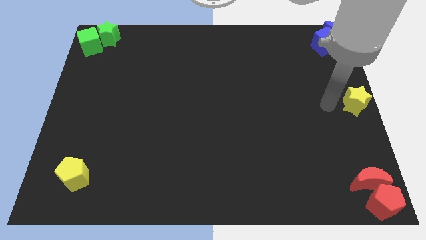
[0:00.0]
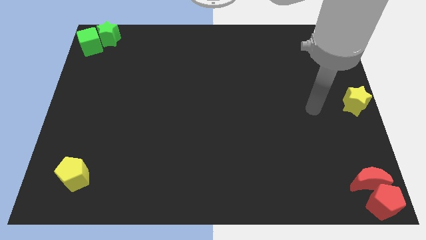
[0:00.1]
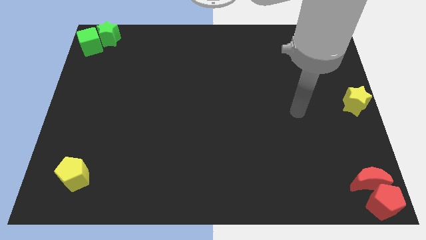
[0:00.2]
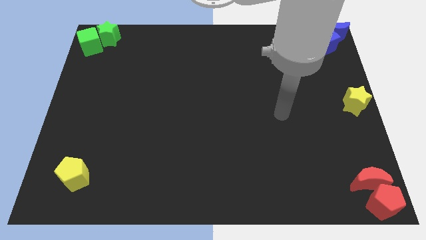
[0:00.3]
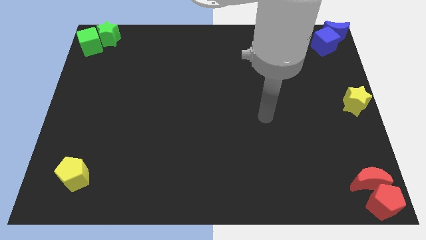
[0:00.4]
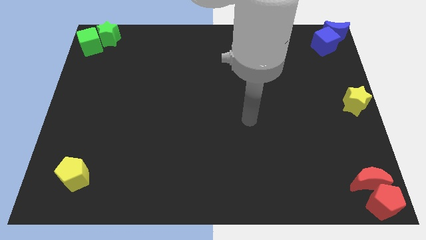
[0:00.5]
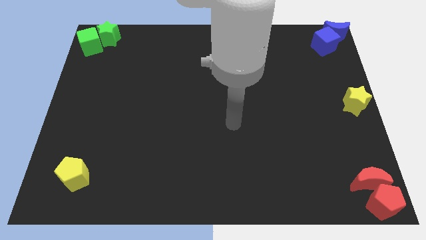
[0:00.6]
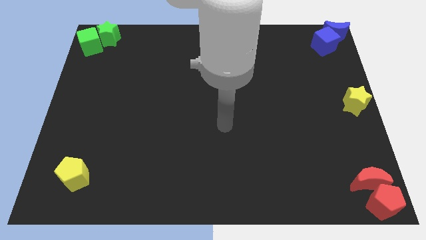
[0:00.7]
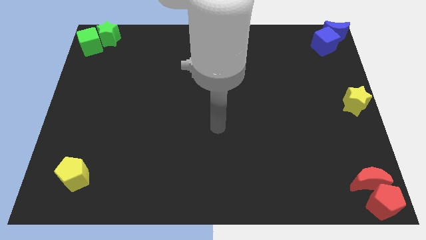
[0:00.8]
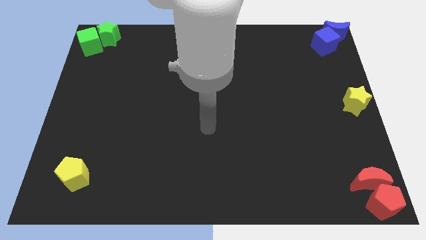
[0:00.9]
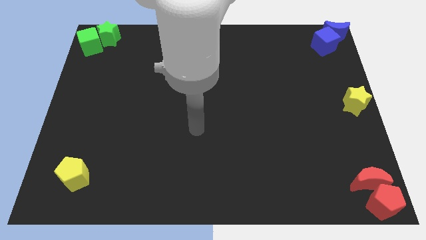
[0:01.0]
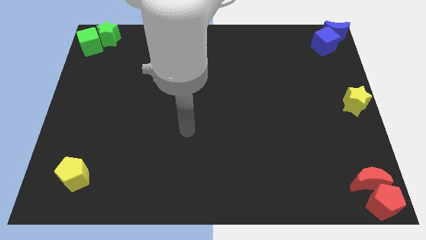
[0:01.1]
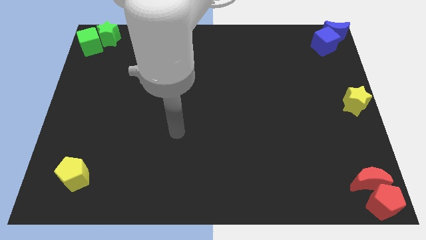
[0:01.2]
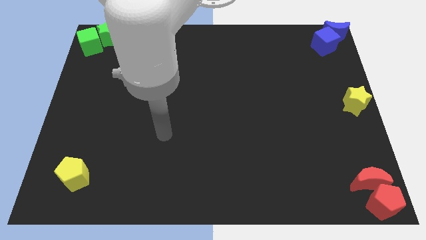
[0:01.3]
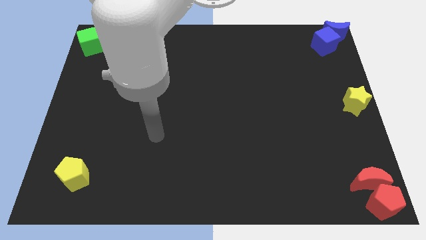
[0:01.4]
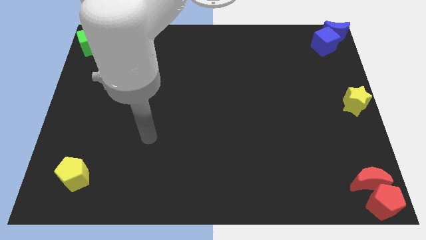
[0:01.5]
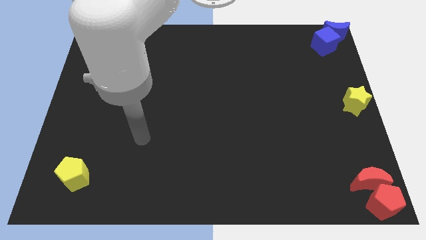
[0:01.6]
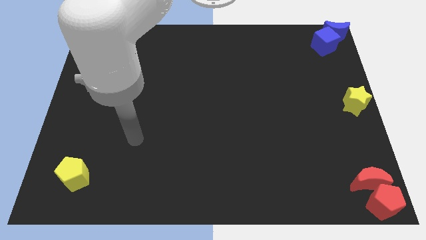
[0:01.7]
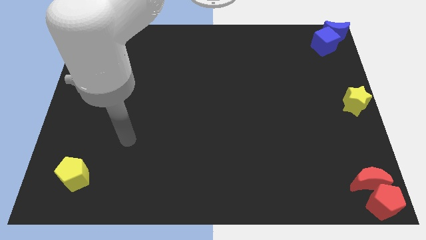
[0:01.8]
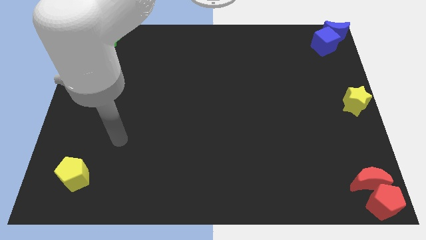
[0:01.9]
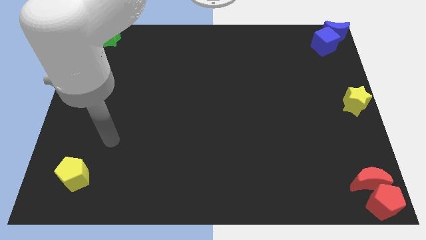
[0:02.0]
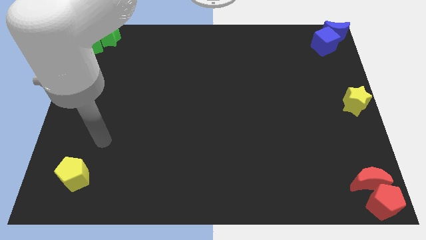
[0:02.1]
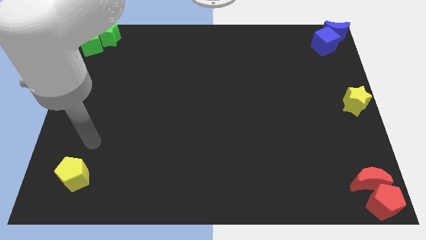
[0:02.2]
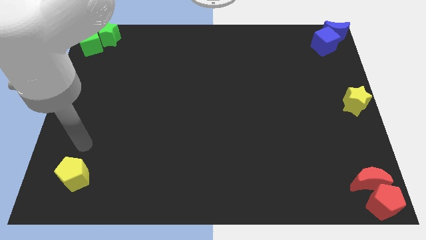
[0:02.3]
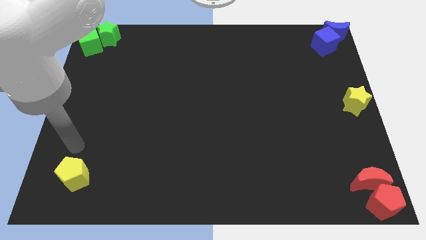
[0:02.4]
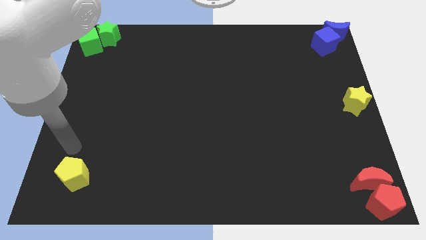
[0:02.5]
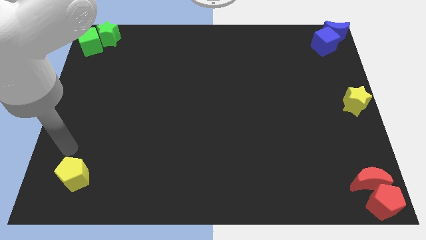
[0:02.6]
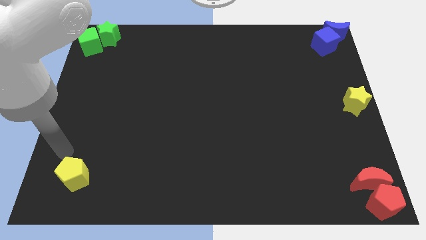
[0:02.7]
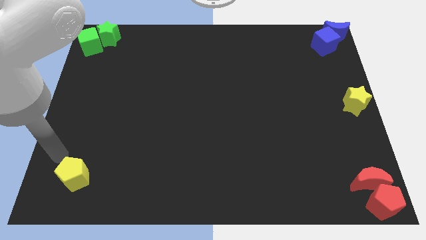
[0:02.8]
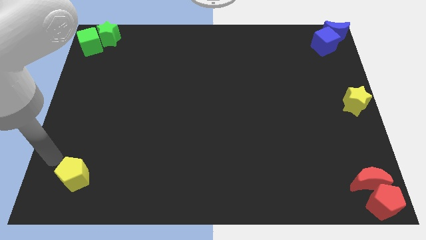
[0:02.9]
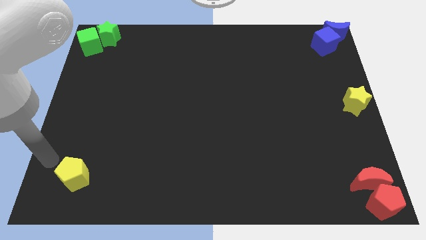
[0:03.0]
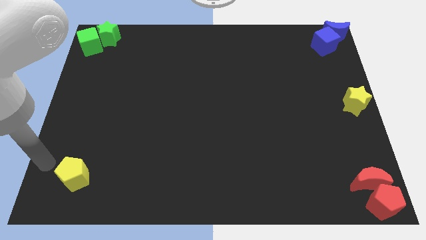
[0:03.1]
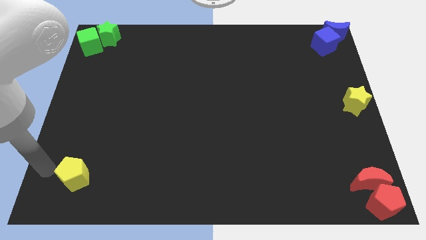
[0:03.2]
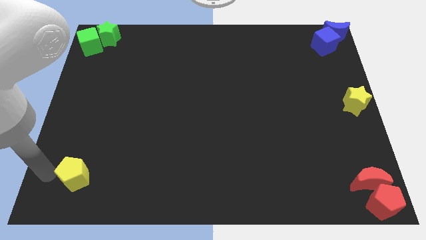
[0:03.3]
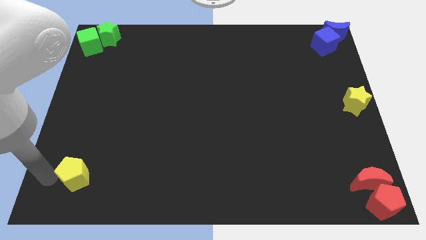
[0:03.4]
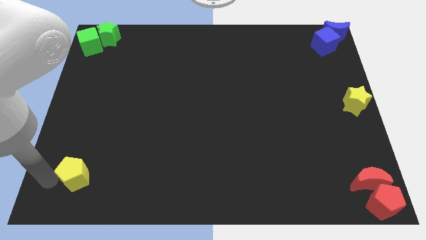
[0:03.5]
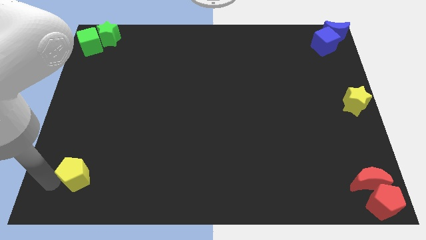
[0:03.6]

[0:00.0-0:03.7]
move your arm towards the yellow pentagon

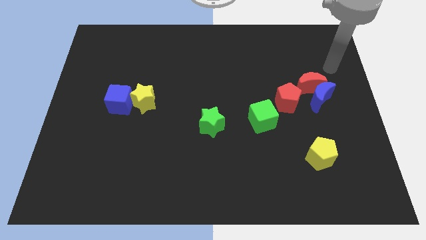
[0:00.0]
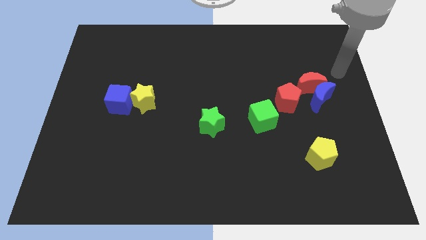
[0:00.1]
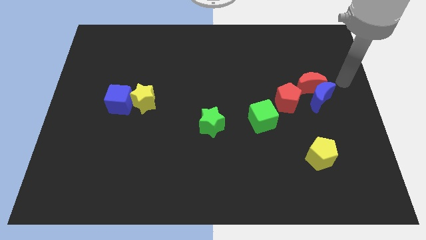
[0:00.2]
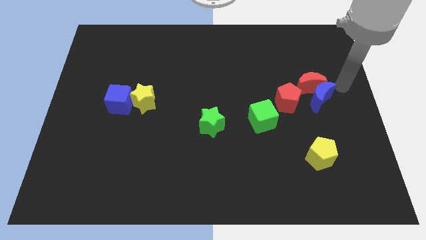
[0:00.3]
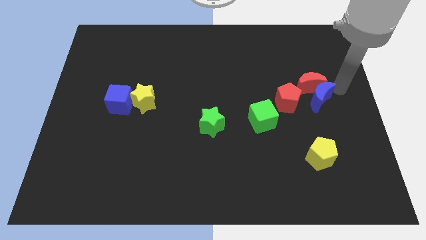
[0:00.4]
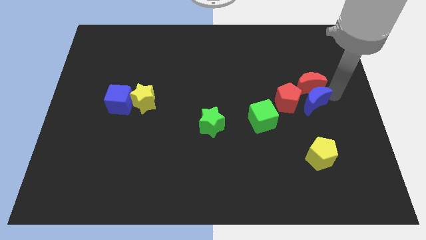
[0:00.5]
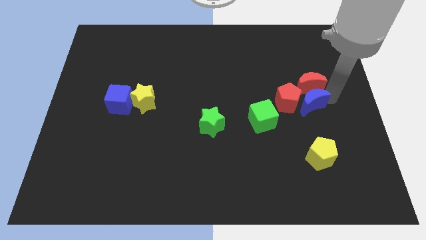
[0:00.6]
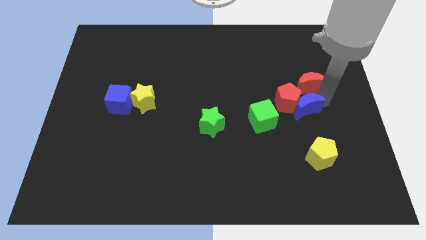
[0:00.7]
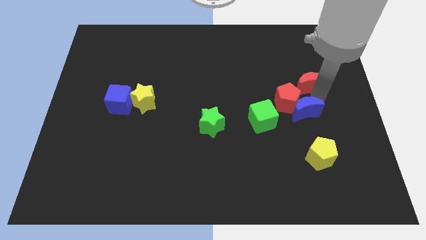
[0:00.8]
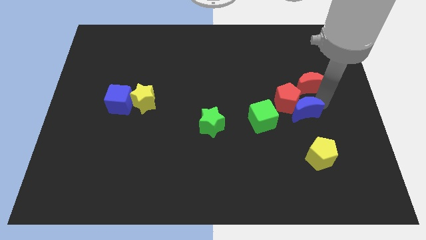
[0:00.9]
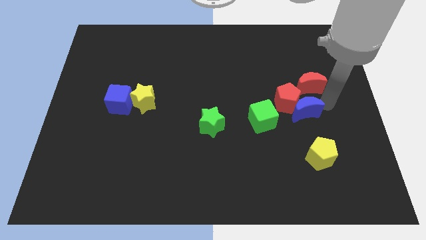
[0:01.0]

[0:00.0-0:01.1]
separate blue moon from red moon

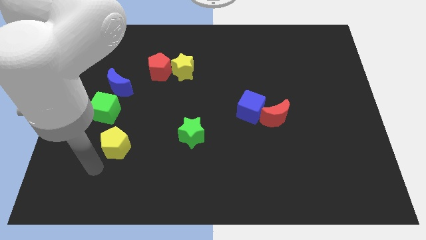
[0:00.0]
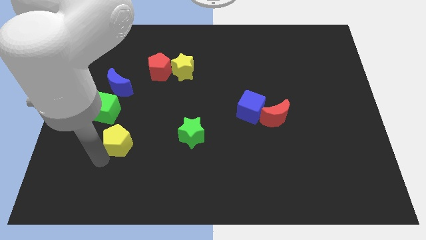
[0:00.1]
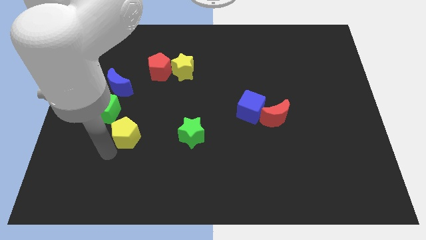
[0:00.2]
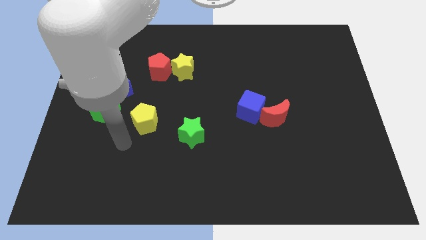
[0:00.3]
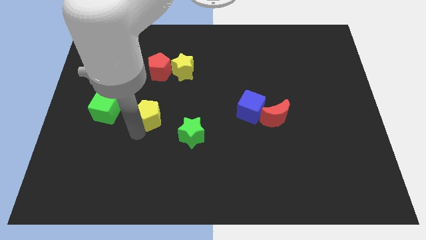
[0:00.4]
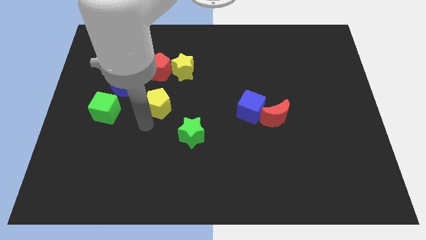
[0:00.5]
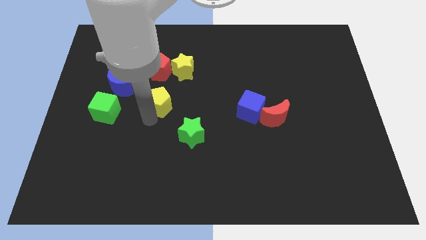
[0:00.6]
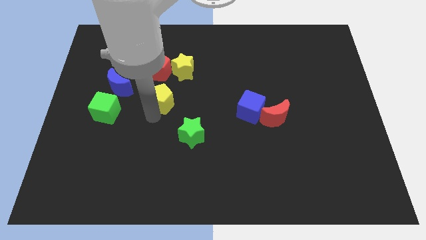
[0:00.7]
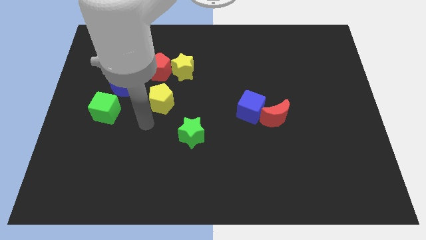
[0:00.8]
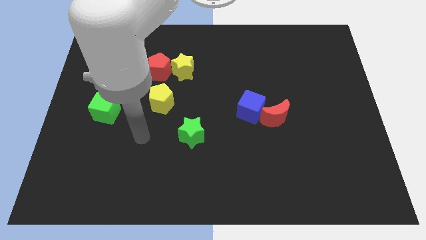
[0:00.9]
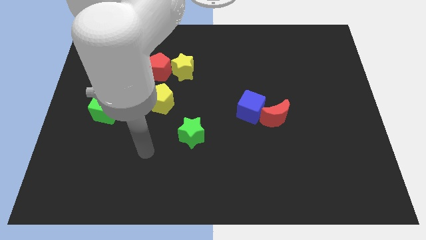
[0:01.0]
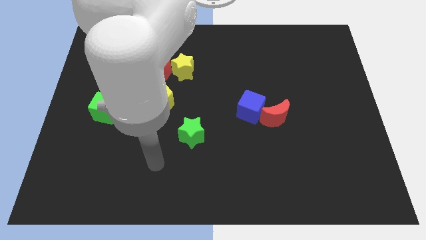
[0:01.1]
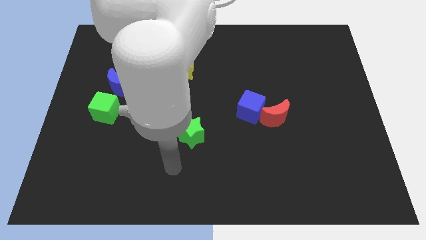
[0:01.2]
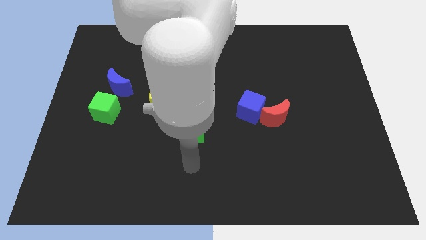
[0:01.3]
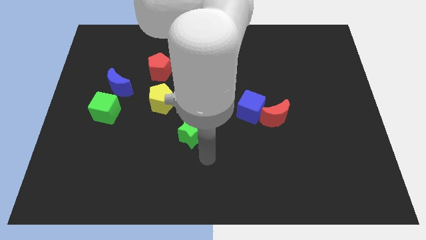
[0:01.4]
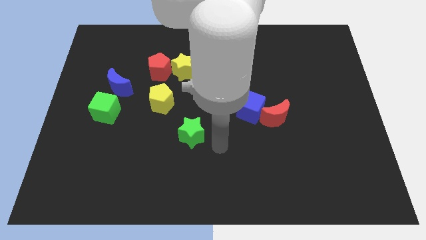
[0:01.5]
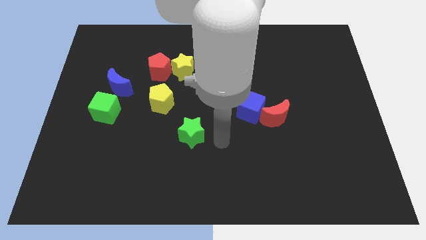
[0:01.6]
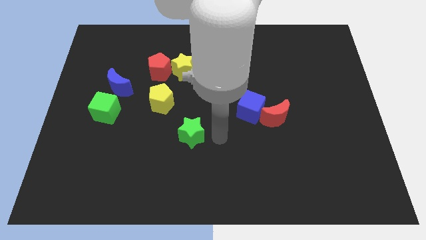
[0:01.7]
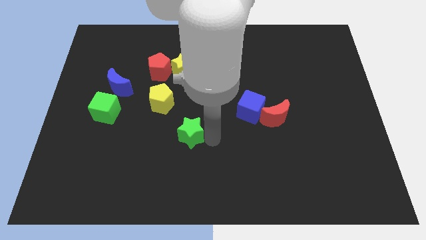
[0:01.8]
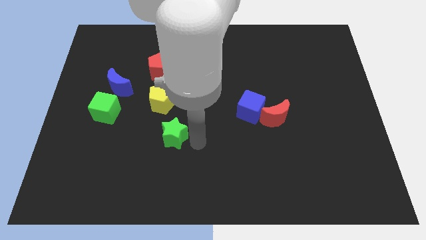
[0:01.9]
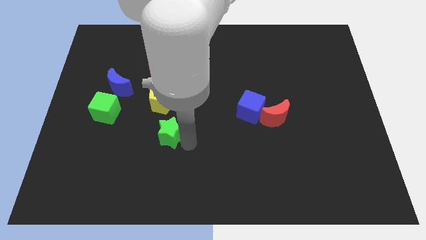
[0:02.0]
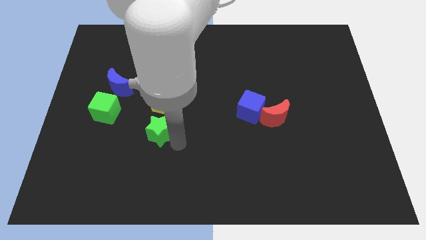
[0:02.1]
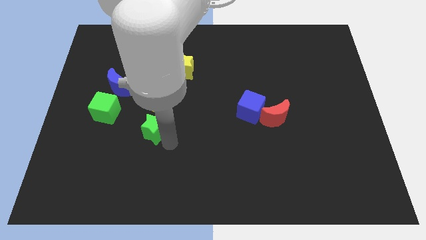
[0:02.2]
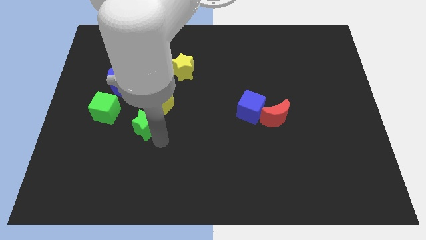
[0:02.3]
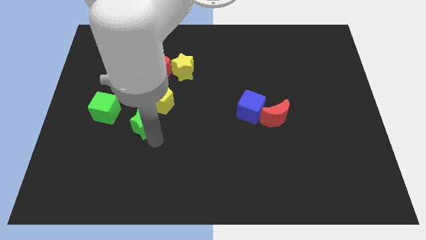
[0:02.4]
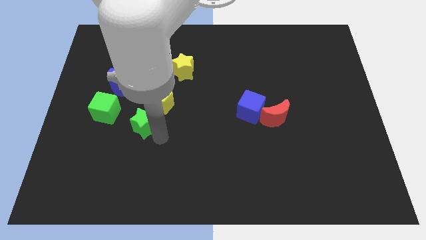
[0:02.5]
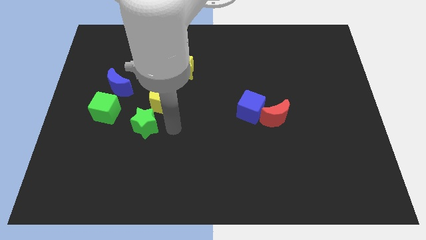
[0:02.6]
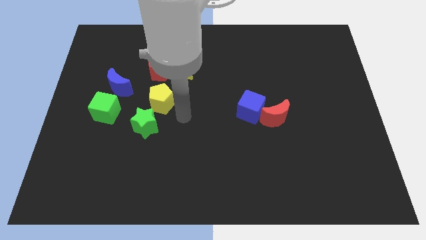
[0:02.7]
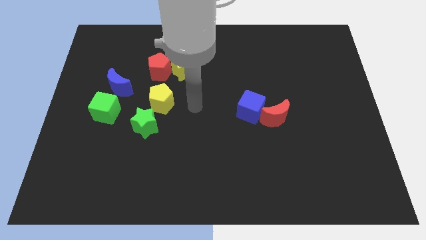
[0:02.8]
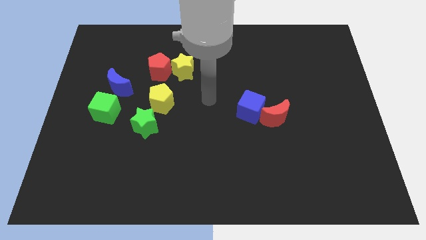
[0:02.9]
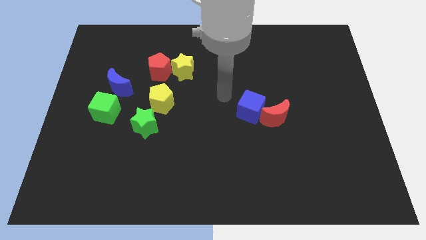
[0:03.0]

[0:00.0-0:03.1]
put the green star diagonally bottom left to the yellow pentagon

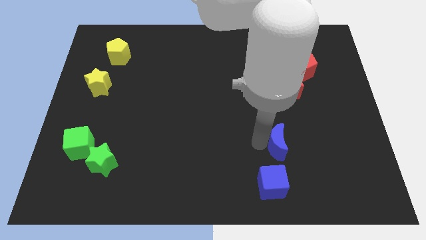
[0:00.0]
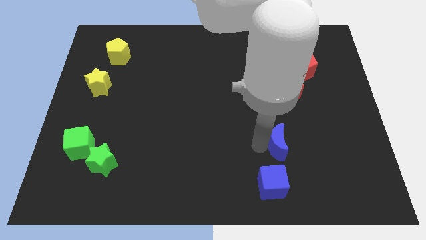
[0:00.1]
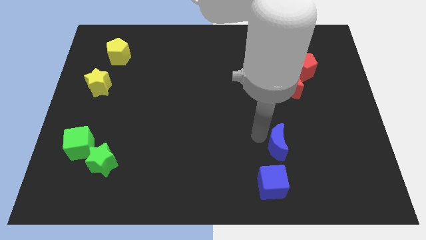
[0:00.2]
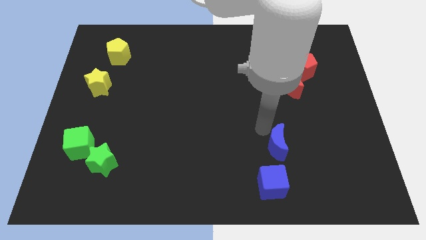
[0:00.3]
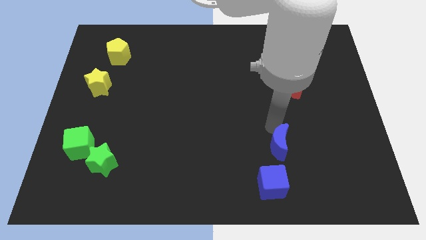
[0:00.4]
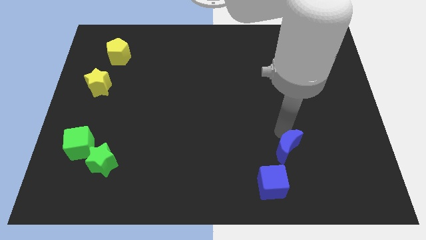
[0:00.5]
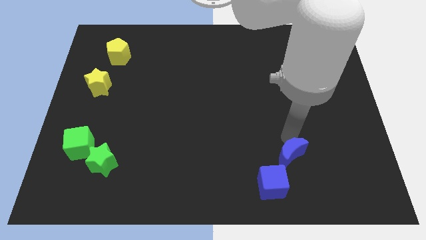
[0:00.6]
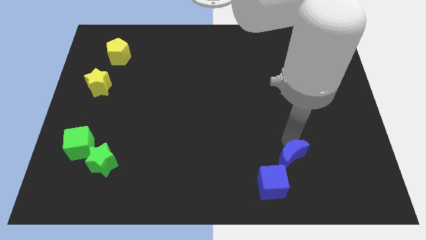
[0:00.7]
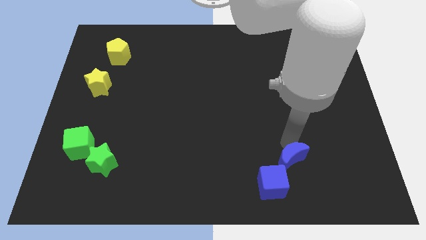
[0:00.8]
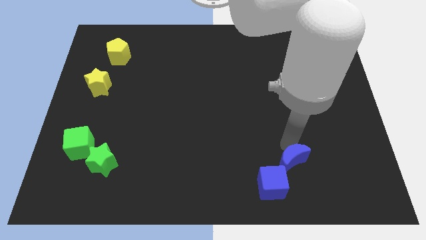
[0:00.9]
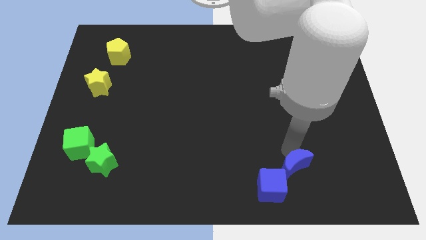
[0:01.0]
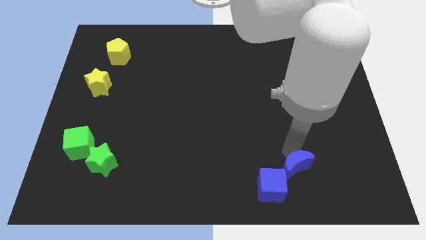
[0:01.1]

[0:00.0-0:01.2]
move the blue crescent into the blue moon
